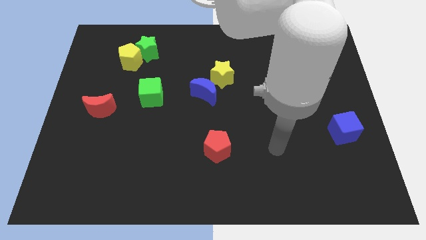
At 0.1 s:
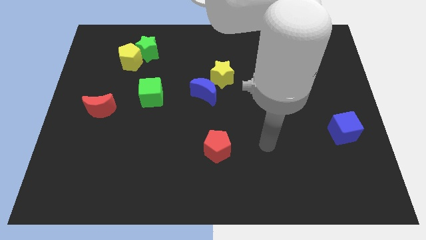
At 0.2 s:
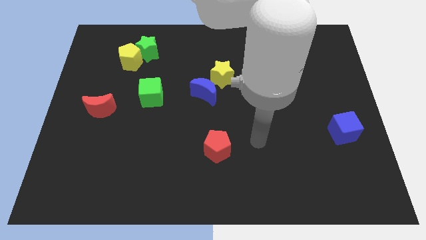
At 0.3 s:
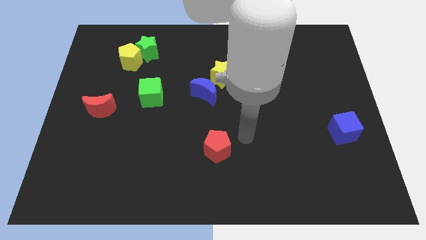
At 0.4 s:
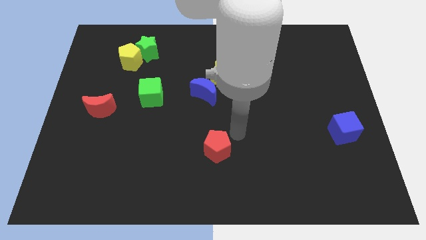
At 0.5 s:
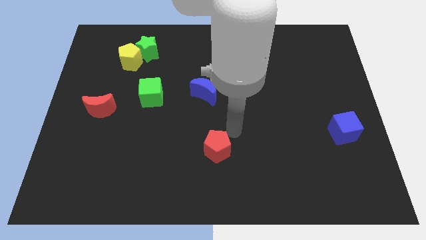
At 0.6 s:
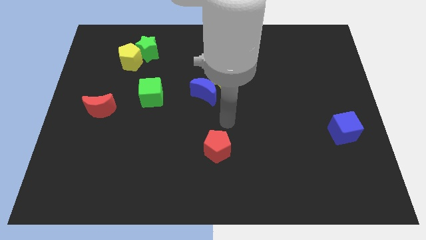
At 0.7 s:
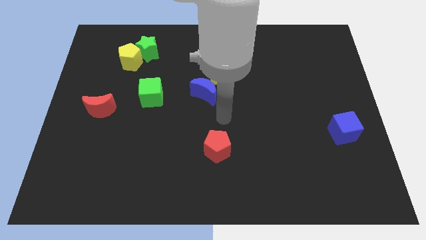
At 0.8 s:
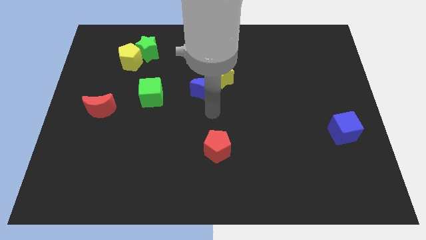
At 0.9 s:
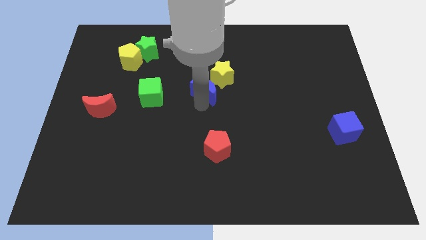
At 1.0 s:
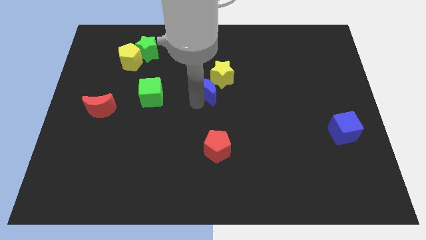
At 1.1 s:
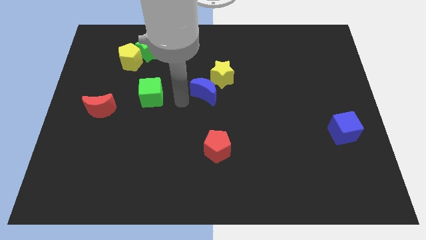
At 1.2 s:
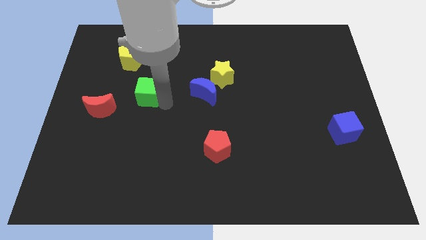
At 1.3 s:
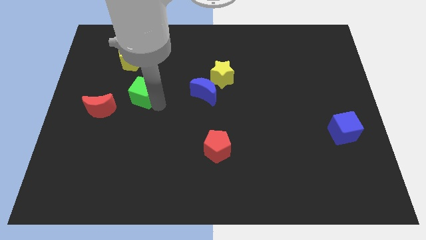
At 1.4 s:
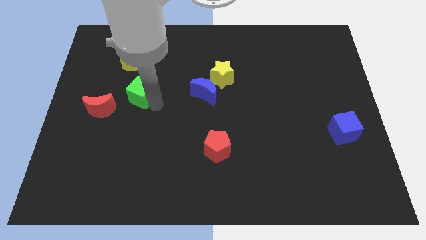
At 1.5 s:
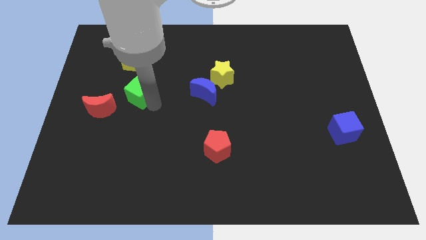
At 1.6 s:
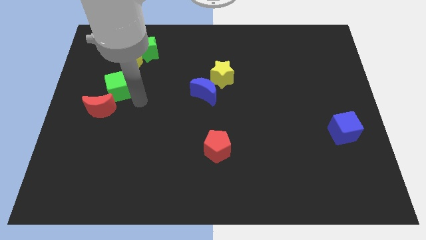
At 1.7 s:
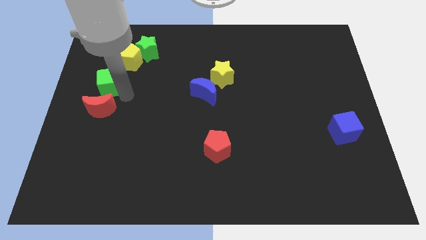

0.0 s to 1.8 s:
slightly push the green cube to the left

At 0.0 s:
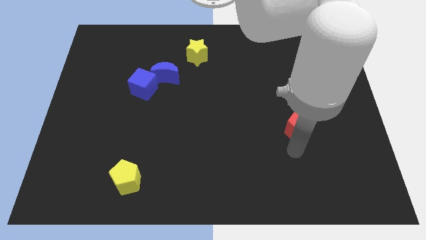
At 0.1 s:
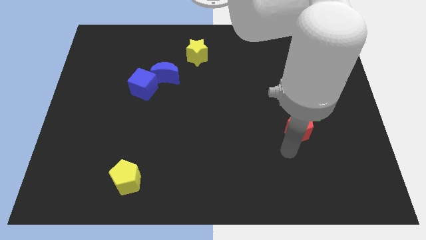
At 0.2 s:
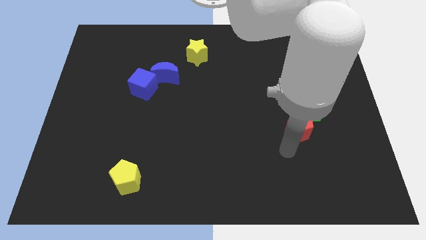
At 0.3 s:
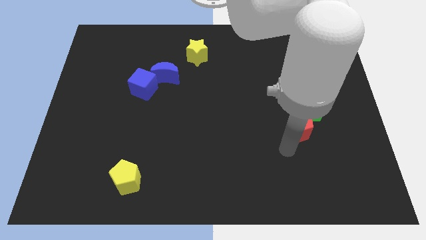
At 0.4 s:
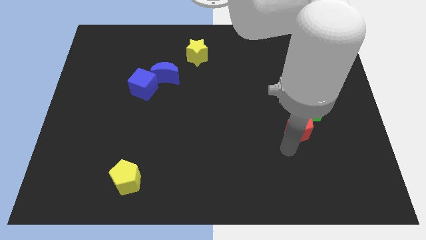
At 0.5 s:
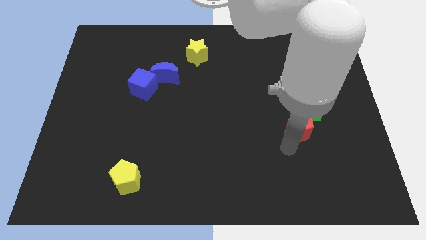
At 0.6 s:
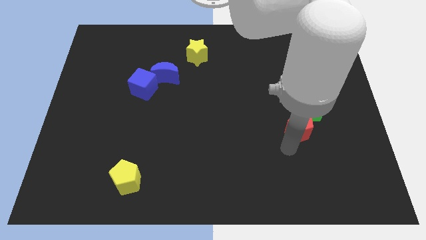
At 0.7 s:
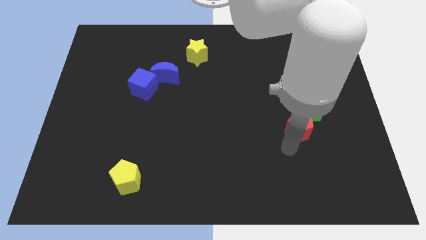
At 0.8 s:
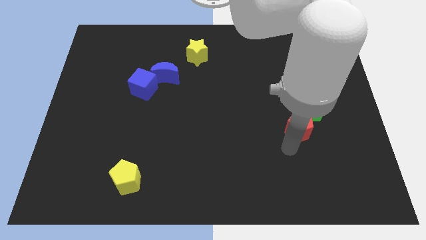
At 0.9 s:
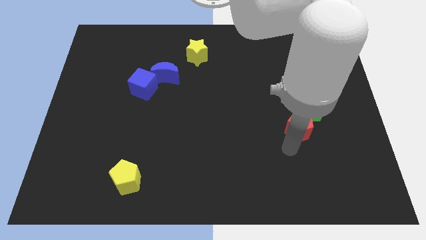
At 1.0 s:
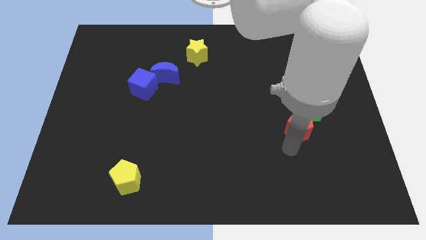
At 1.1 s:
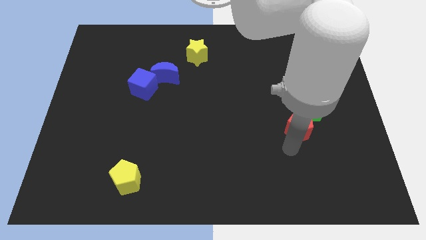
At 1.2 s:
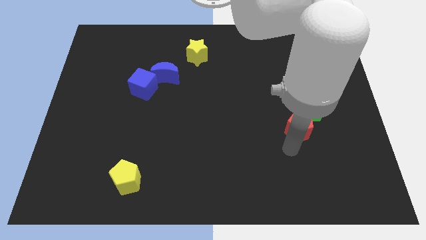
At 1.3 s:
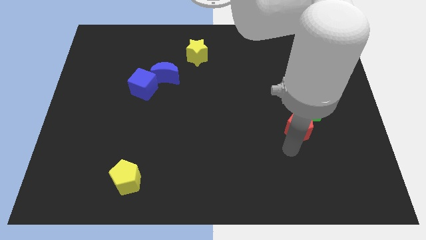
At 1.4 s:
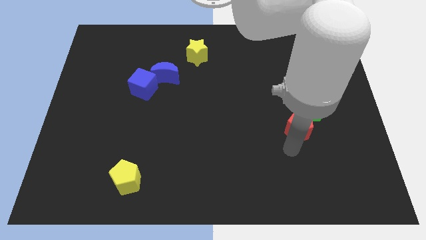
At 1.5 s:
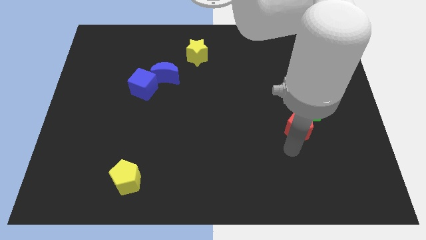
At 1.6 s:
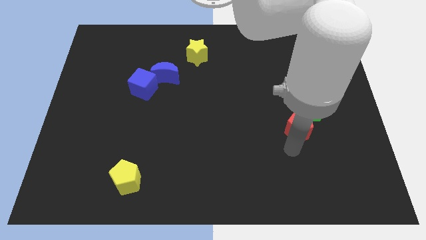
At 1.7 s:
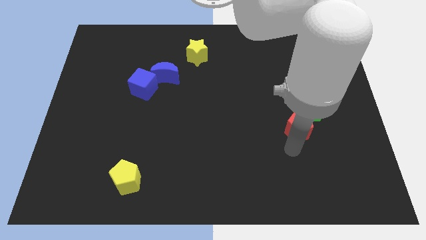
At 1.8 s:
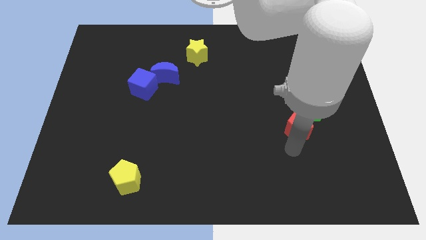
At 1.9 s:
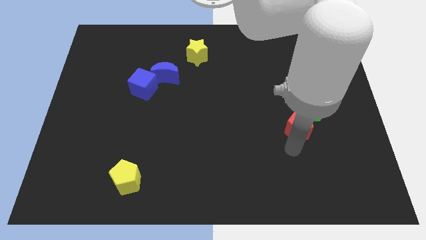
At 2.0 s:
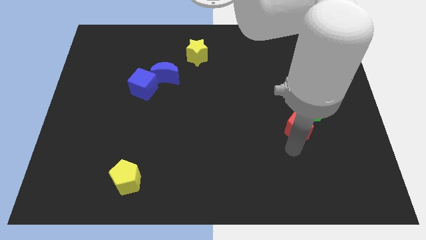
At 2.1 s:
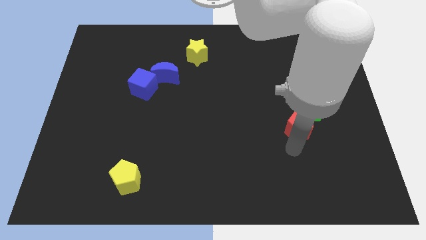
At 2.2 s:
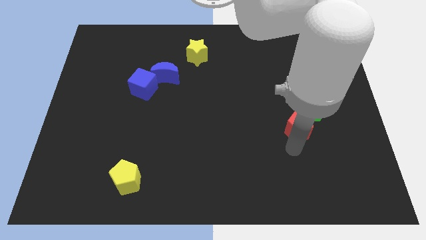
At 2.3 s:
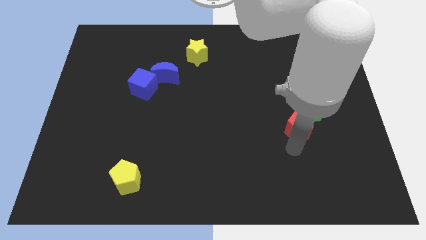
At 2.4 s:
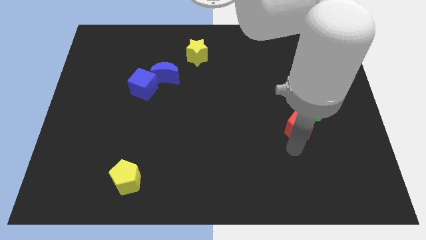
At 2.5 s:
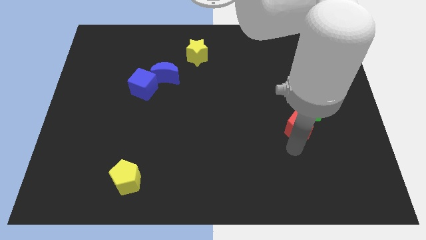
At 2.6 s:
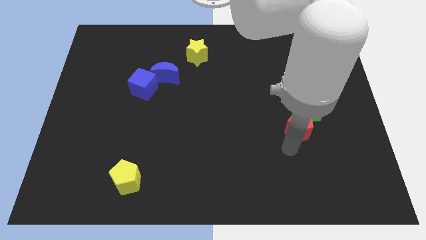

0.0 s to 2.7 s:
place your arm to the bottom of red pentagon

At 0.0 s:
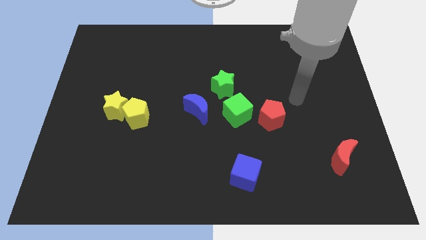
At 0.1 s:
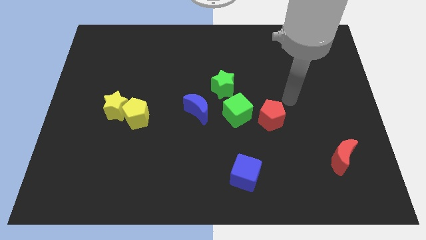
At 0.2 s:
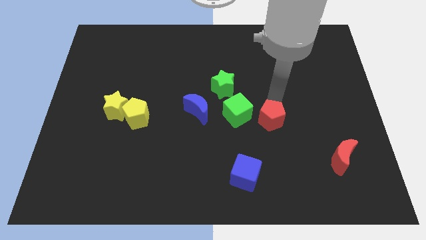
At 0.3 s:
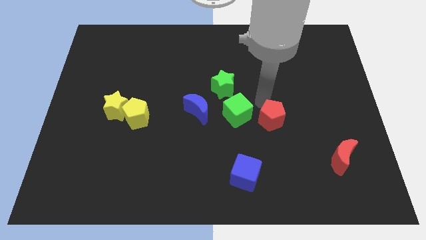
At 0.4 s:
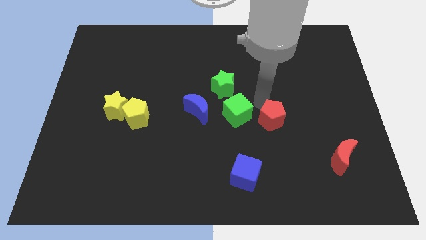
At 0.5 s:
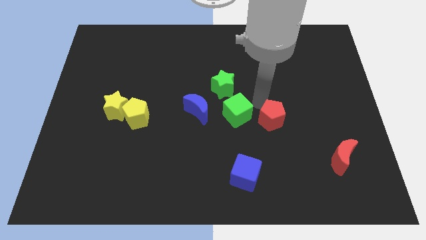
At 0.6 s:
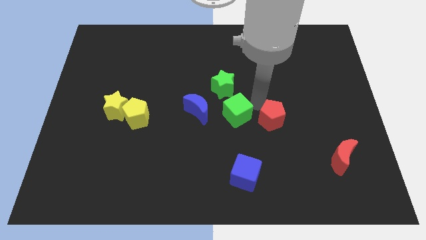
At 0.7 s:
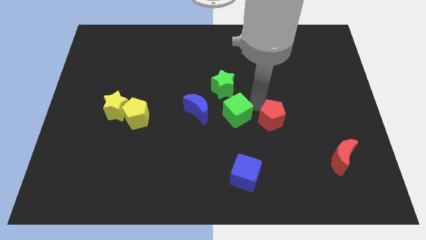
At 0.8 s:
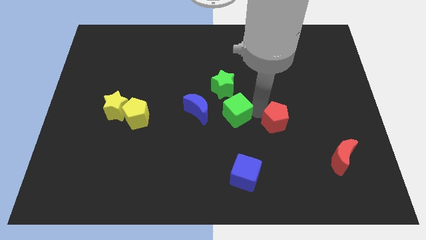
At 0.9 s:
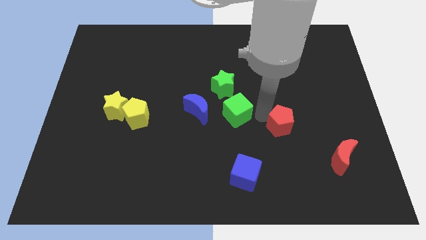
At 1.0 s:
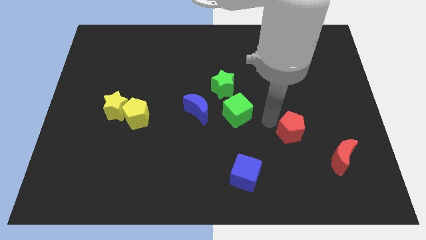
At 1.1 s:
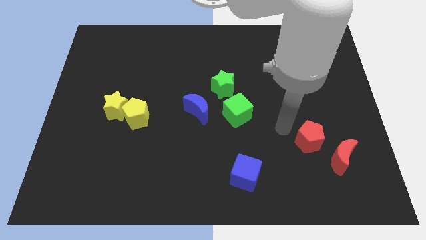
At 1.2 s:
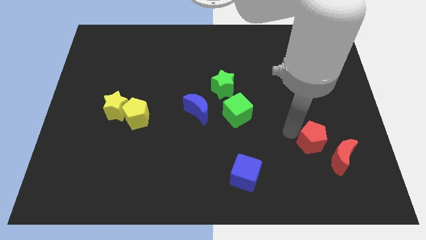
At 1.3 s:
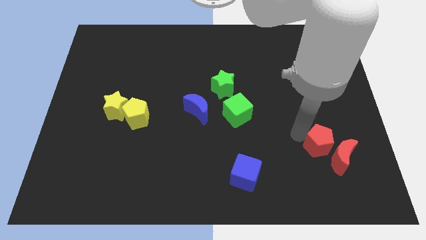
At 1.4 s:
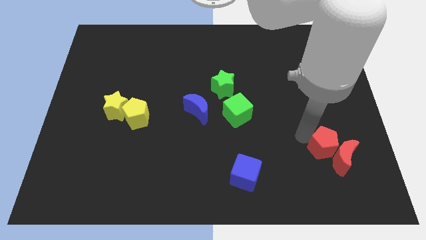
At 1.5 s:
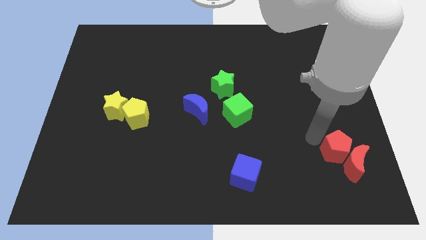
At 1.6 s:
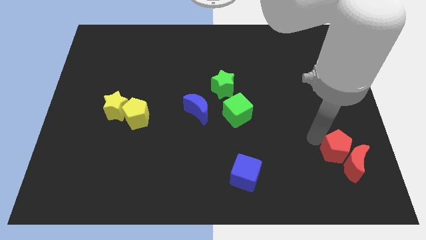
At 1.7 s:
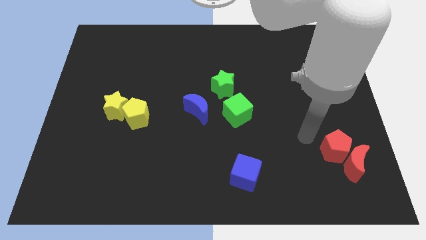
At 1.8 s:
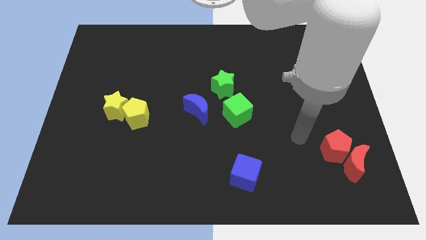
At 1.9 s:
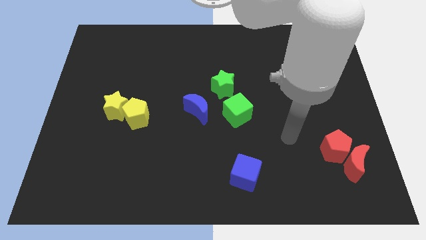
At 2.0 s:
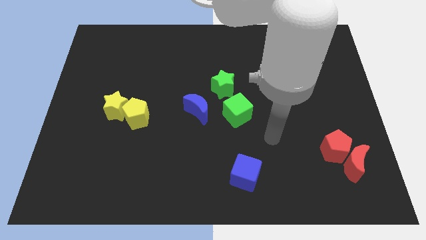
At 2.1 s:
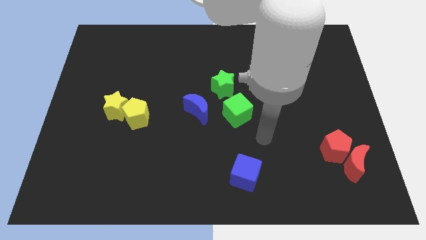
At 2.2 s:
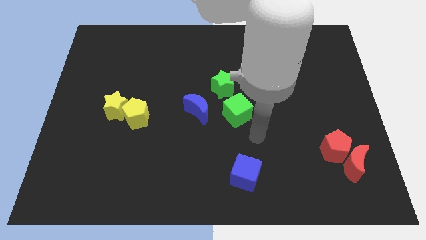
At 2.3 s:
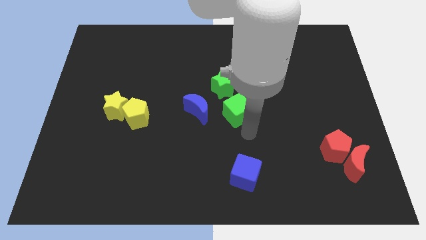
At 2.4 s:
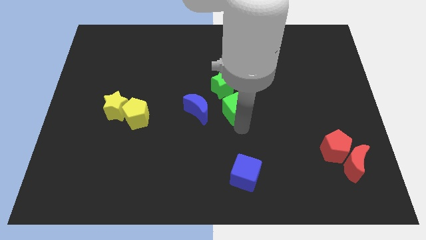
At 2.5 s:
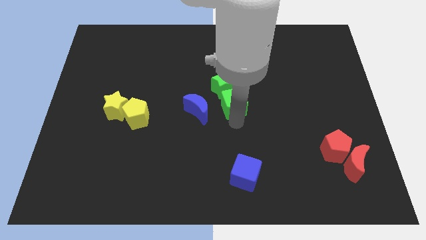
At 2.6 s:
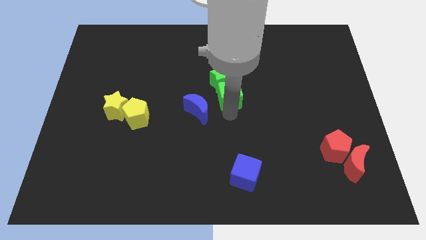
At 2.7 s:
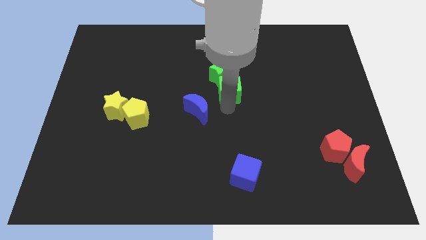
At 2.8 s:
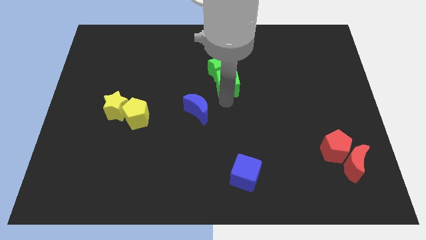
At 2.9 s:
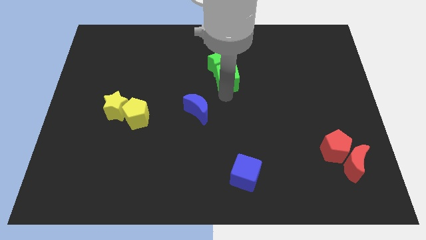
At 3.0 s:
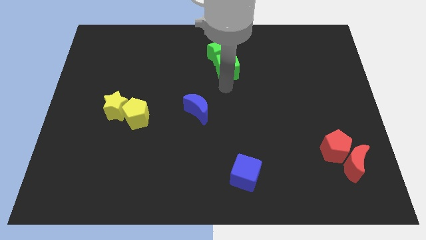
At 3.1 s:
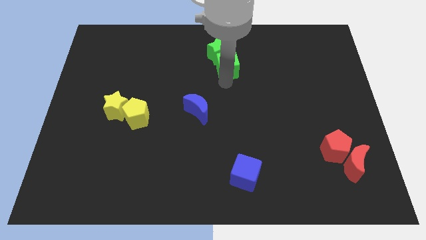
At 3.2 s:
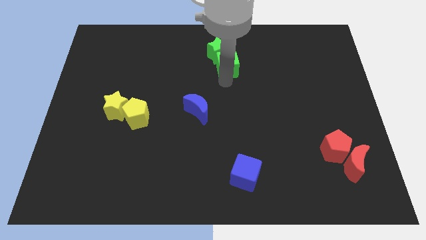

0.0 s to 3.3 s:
separate green cube and red pentagon from each other

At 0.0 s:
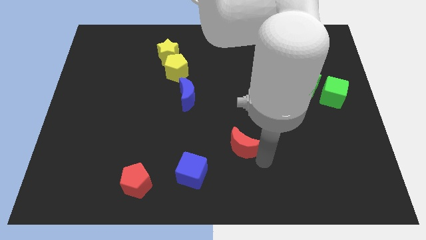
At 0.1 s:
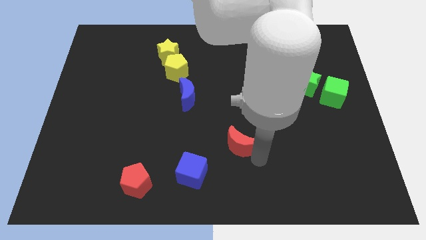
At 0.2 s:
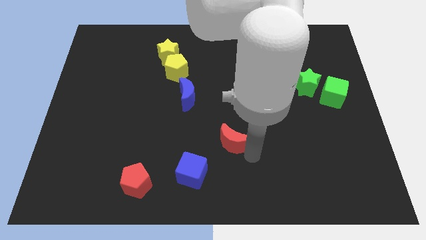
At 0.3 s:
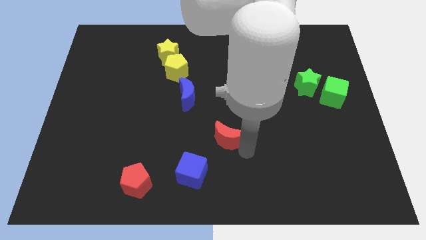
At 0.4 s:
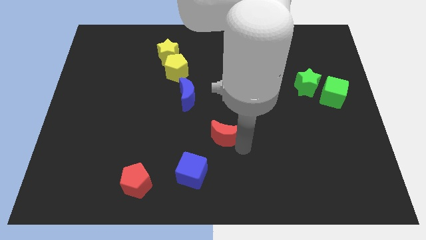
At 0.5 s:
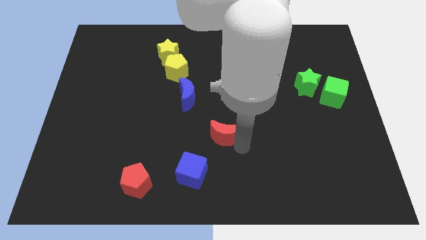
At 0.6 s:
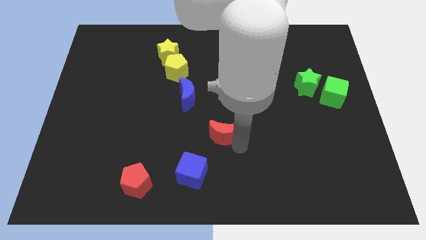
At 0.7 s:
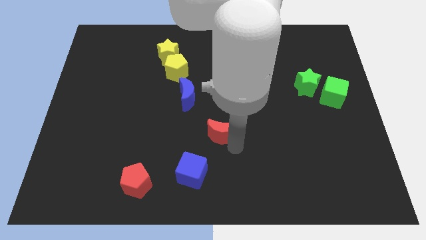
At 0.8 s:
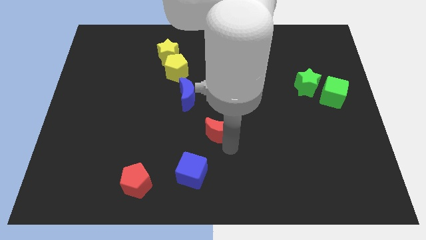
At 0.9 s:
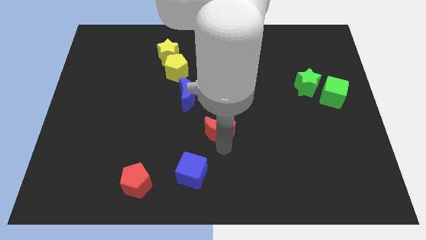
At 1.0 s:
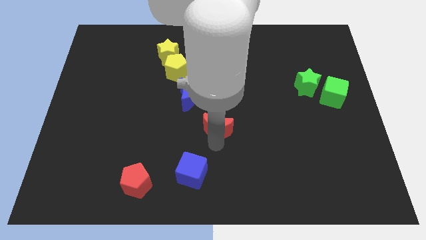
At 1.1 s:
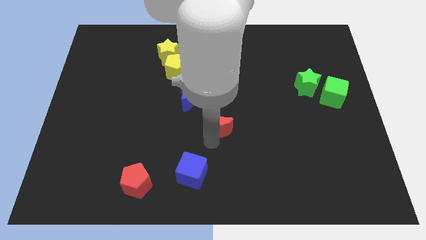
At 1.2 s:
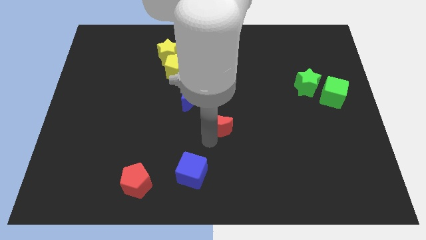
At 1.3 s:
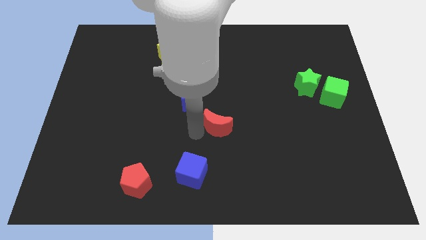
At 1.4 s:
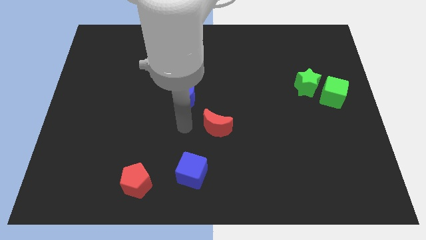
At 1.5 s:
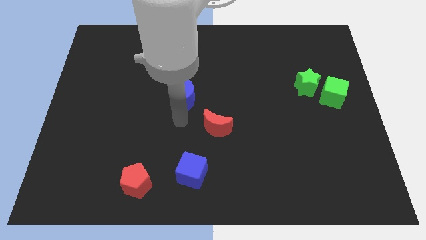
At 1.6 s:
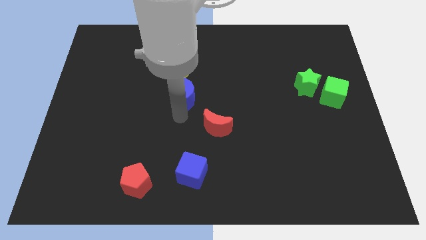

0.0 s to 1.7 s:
drag the red moon towards the blue moon
